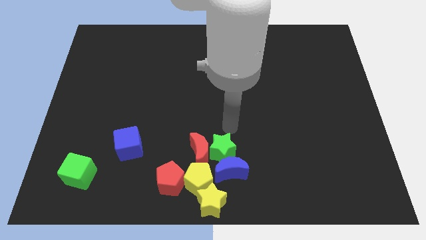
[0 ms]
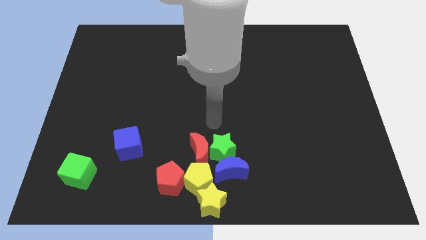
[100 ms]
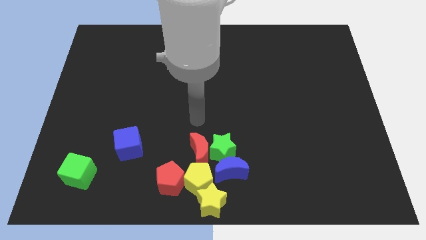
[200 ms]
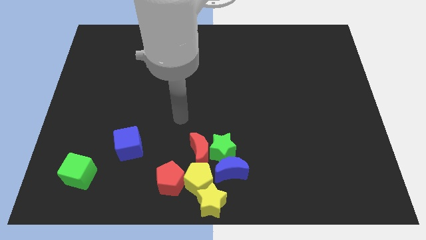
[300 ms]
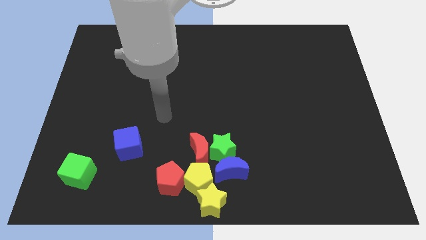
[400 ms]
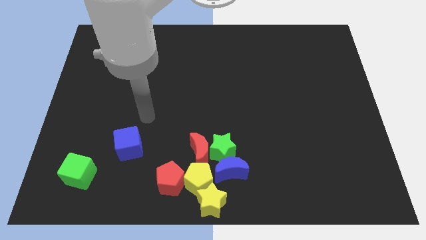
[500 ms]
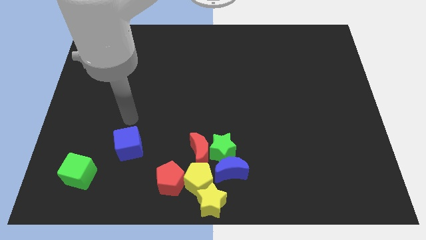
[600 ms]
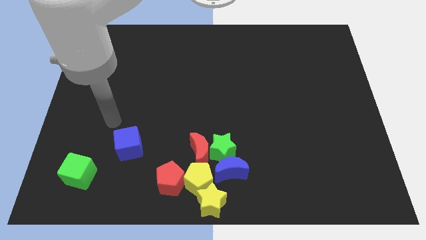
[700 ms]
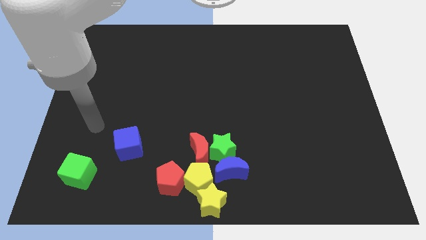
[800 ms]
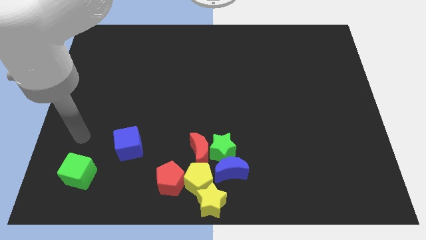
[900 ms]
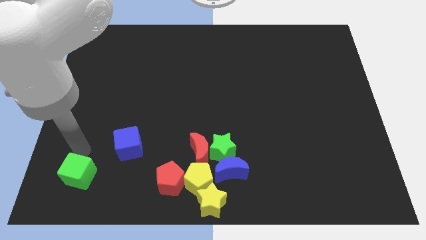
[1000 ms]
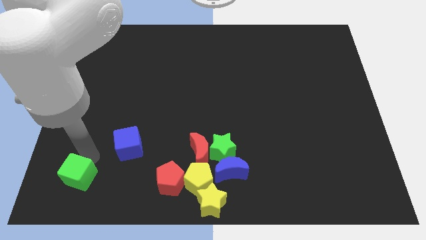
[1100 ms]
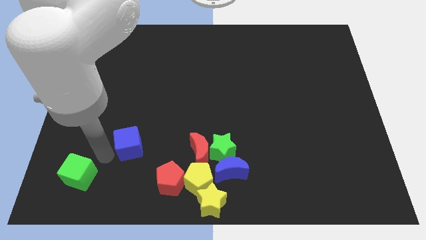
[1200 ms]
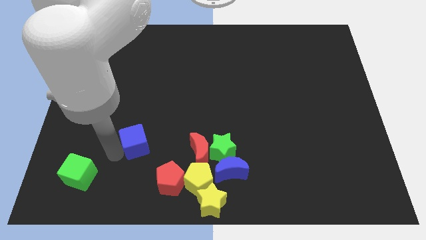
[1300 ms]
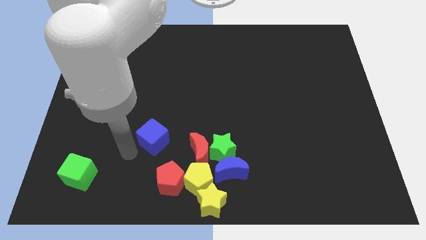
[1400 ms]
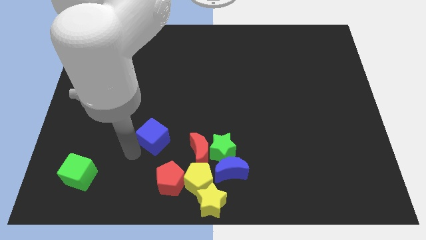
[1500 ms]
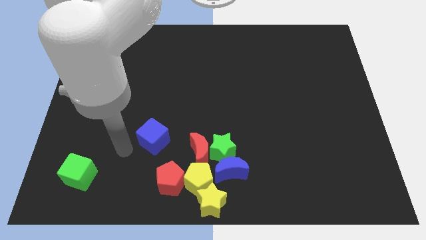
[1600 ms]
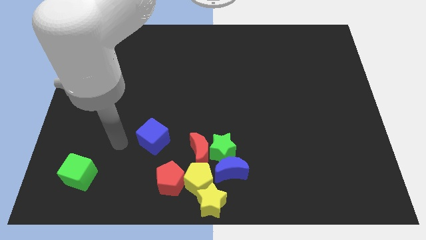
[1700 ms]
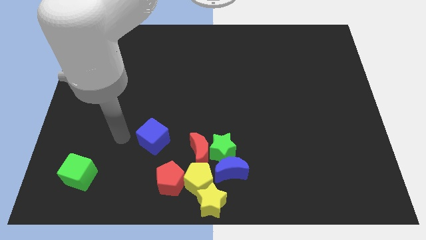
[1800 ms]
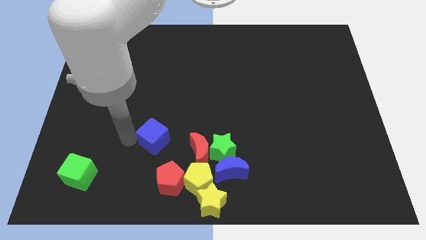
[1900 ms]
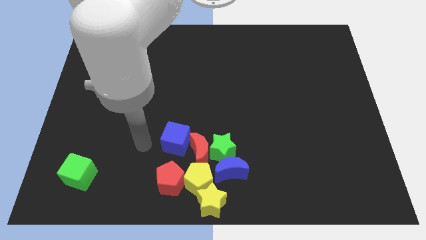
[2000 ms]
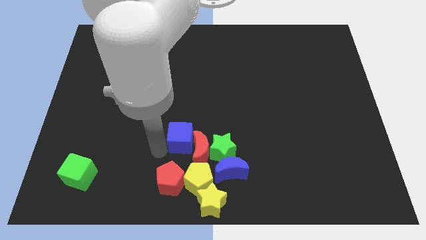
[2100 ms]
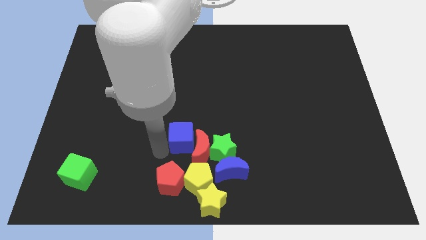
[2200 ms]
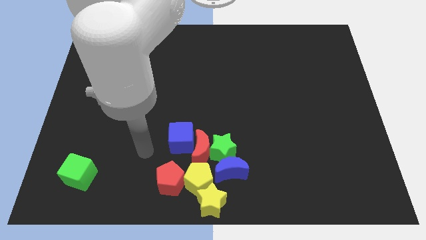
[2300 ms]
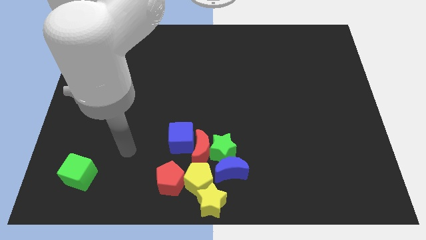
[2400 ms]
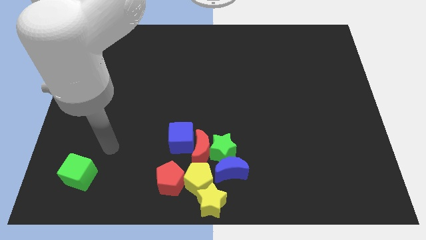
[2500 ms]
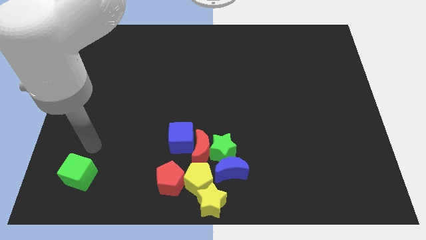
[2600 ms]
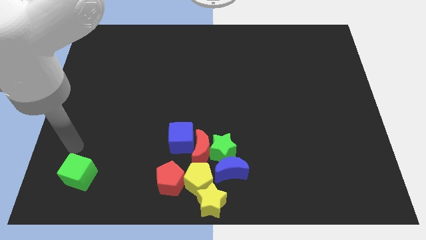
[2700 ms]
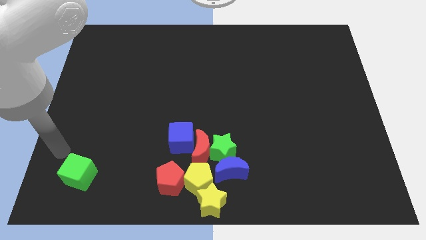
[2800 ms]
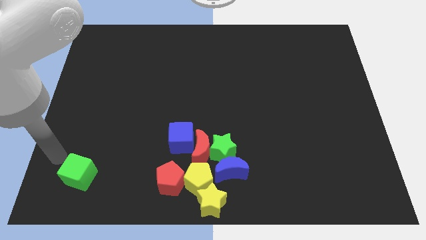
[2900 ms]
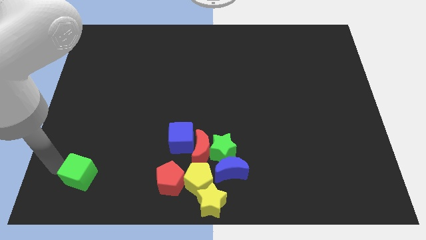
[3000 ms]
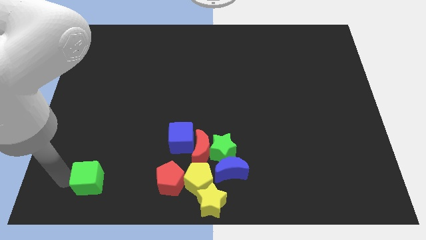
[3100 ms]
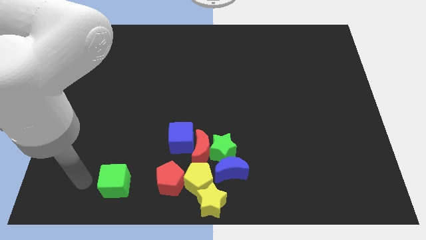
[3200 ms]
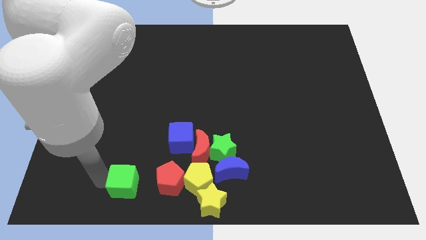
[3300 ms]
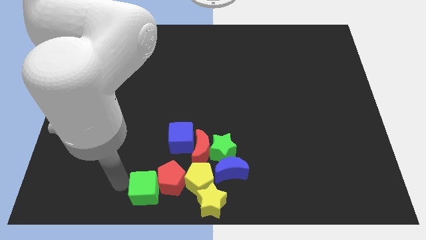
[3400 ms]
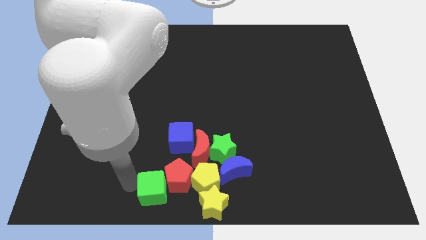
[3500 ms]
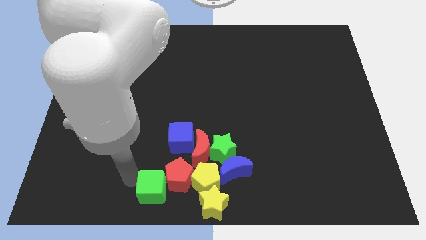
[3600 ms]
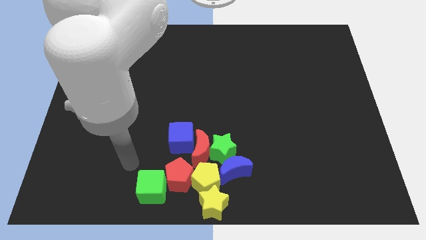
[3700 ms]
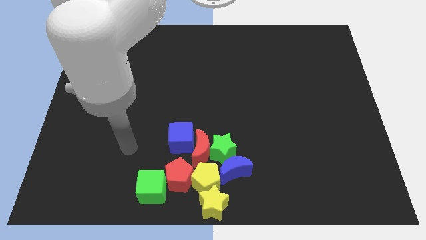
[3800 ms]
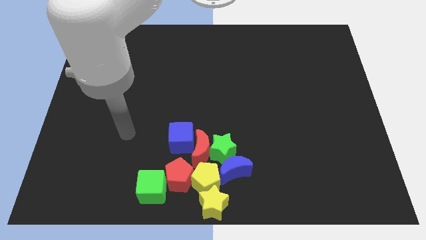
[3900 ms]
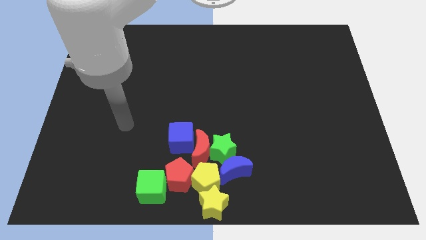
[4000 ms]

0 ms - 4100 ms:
add both the cubes to the group of blocks at the bottom center of the board

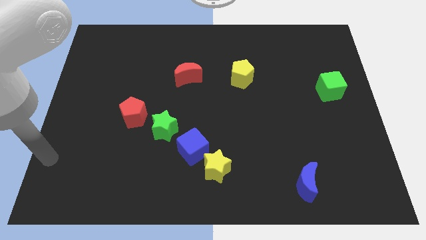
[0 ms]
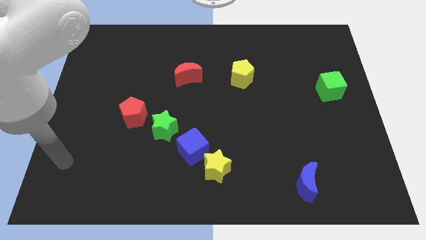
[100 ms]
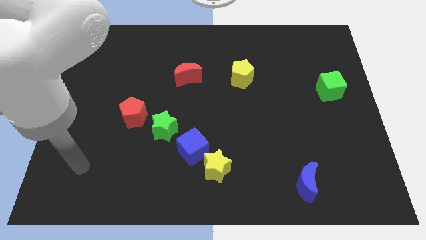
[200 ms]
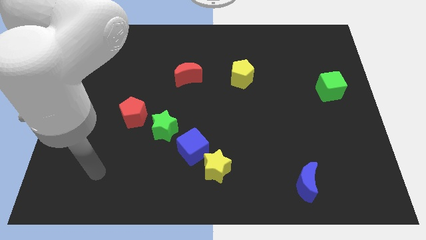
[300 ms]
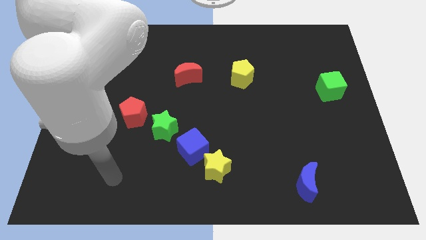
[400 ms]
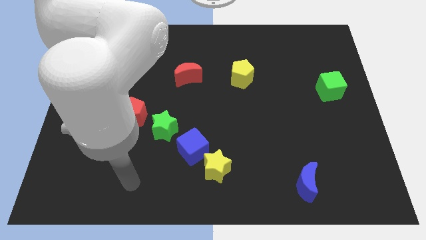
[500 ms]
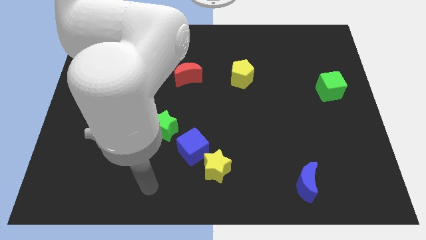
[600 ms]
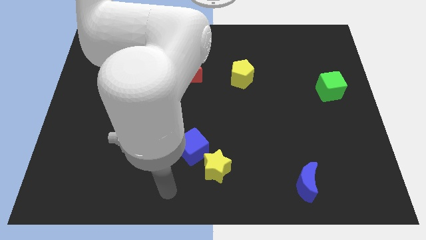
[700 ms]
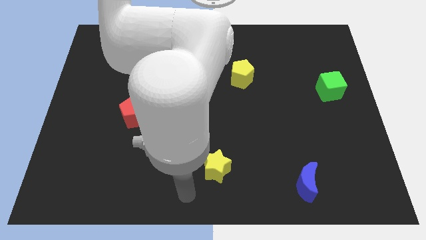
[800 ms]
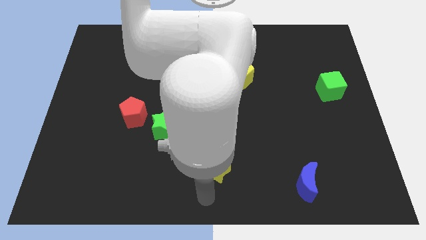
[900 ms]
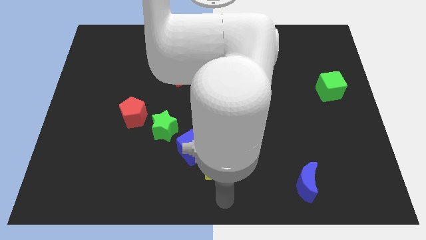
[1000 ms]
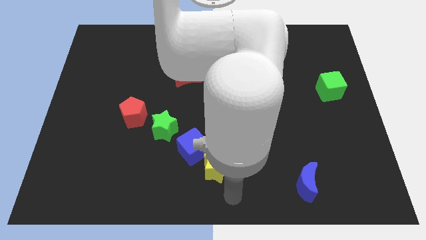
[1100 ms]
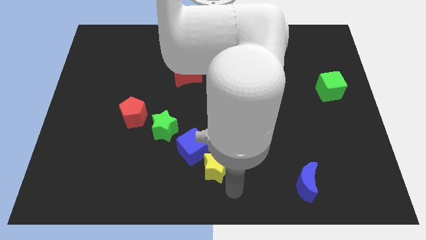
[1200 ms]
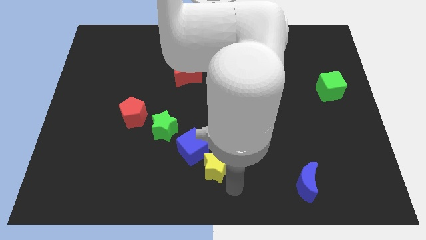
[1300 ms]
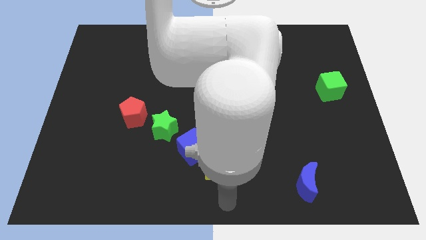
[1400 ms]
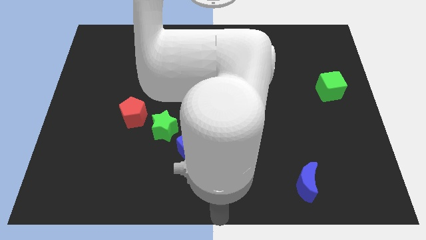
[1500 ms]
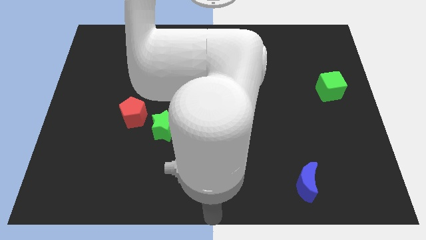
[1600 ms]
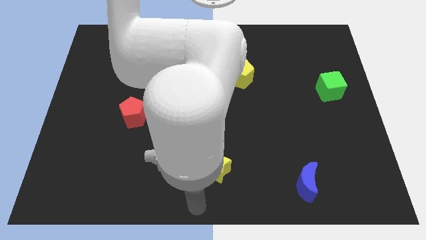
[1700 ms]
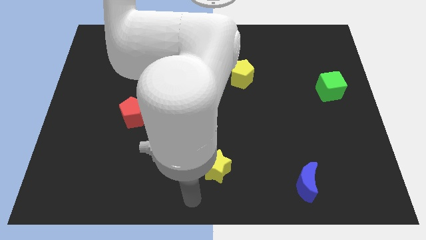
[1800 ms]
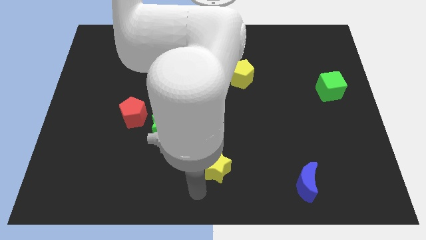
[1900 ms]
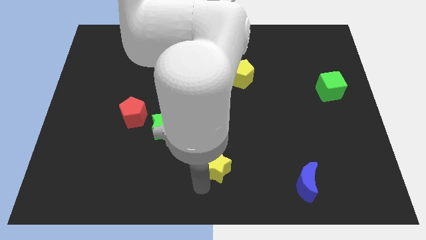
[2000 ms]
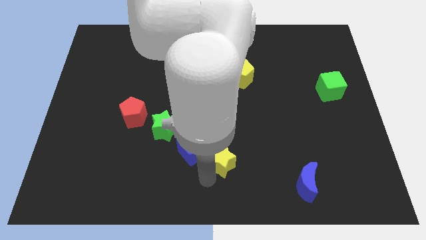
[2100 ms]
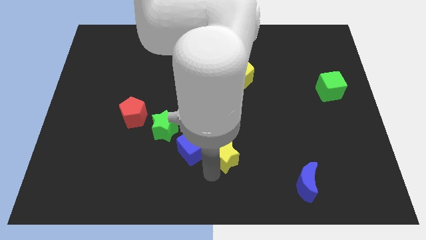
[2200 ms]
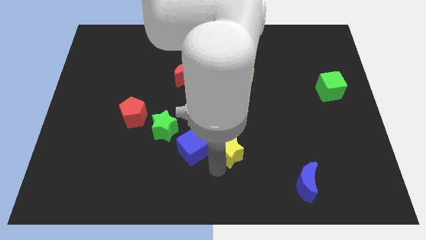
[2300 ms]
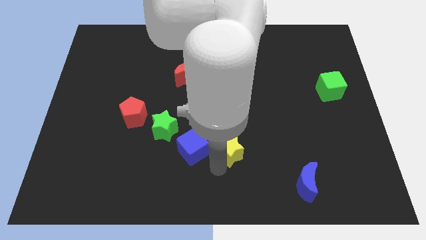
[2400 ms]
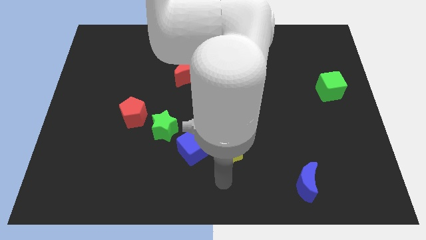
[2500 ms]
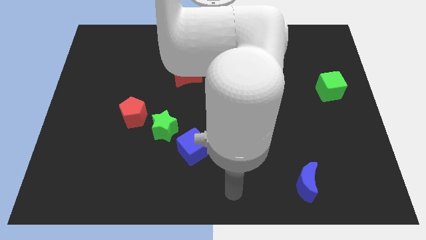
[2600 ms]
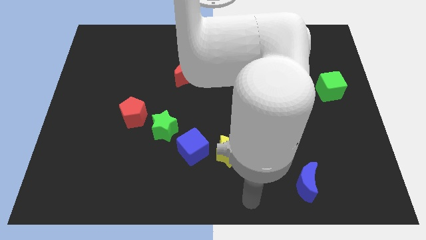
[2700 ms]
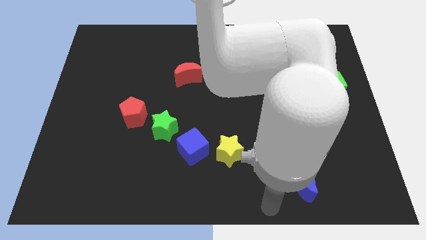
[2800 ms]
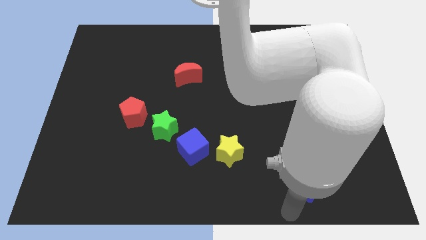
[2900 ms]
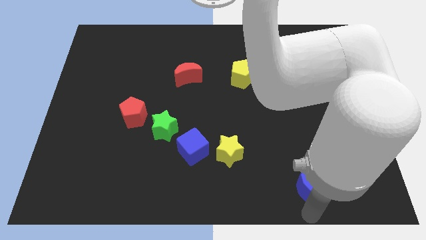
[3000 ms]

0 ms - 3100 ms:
push the yellow star to the right of the blue cube

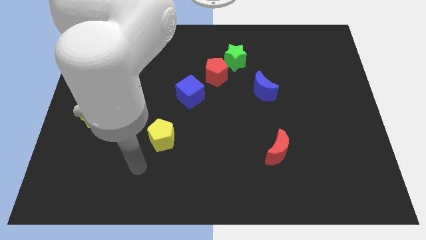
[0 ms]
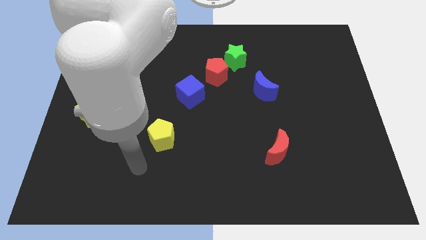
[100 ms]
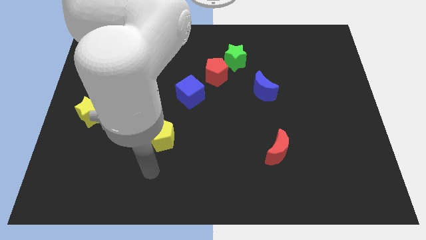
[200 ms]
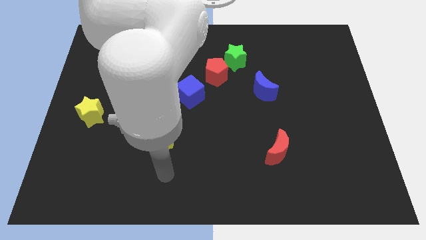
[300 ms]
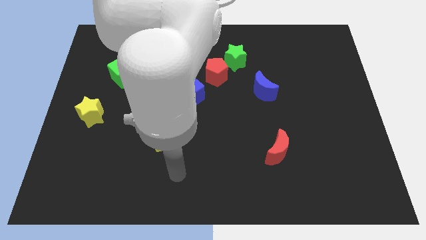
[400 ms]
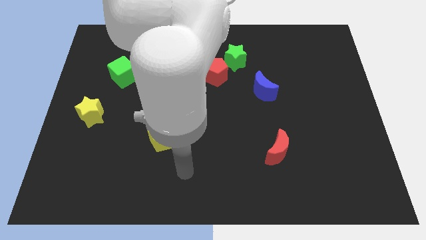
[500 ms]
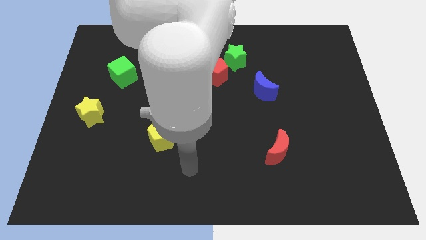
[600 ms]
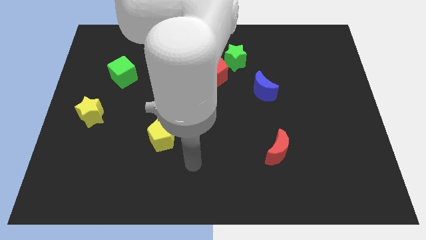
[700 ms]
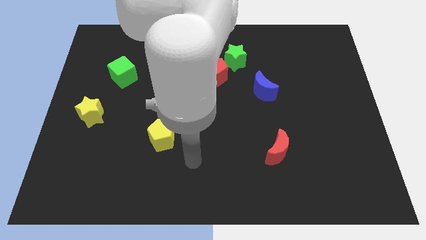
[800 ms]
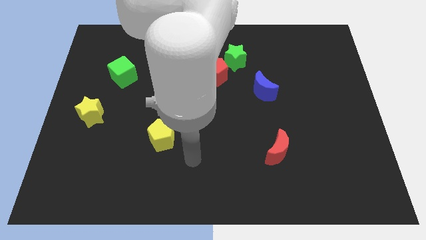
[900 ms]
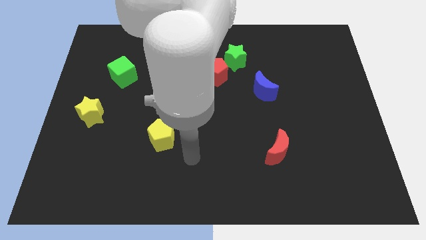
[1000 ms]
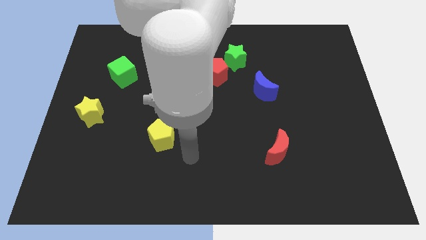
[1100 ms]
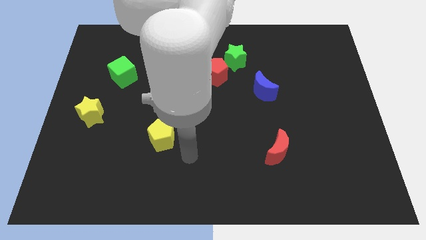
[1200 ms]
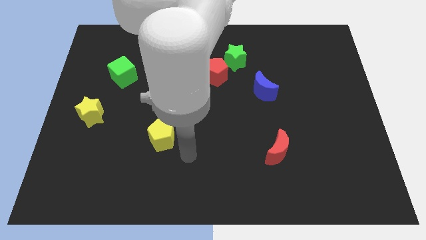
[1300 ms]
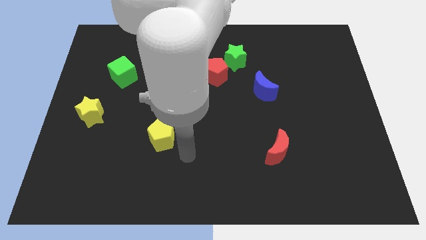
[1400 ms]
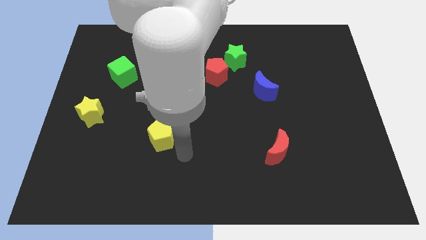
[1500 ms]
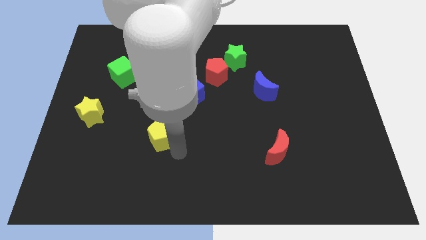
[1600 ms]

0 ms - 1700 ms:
place your arm to the right side of the yellow pentagon
